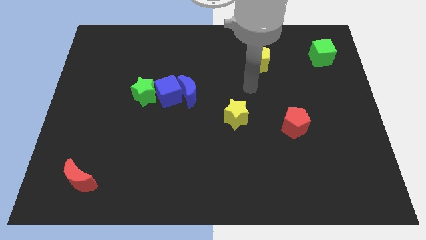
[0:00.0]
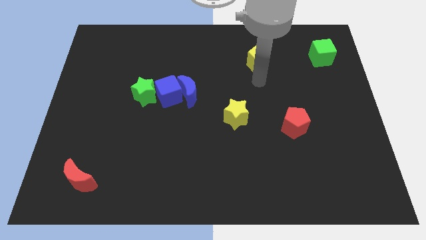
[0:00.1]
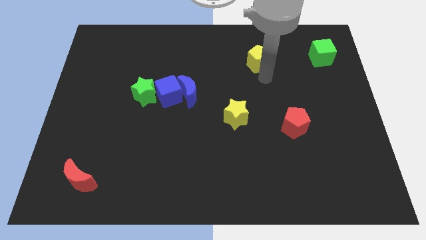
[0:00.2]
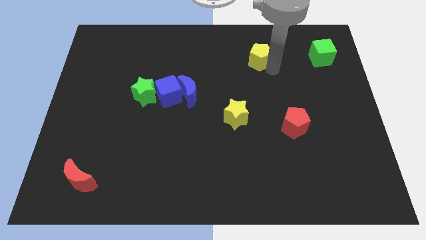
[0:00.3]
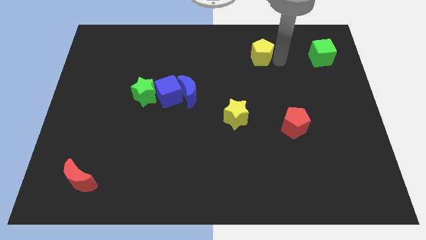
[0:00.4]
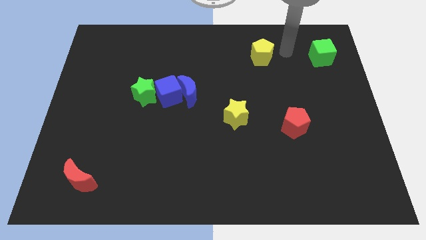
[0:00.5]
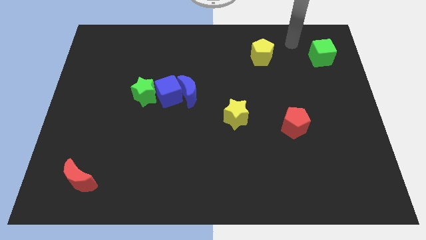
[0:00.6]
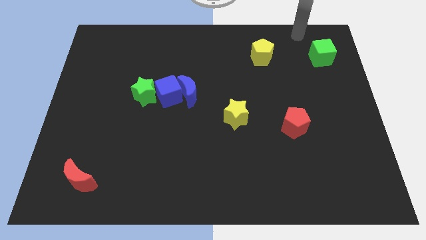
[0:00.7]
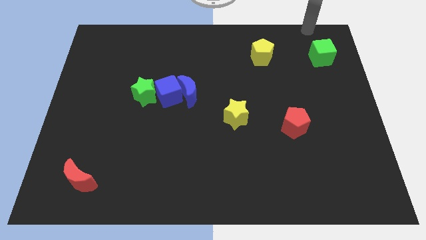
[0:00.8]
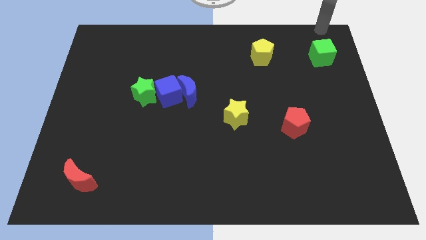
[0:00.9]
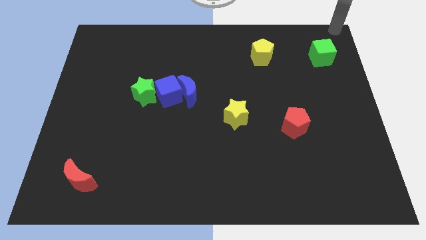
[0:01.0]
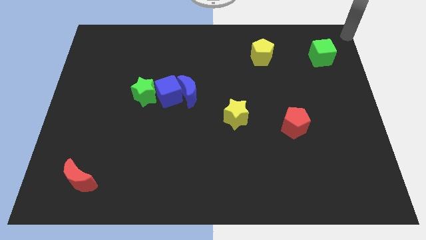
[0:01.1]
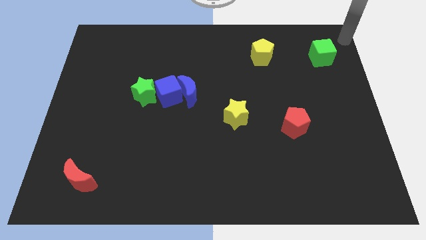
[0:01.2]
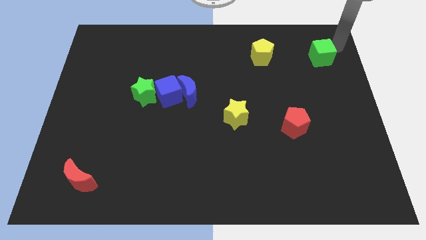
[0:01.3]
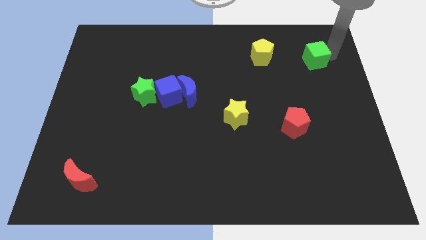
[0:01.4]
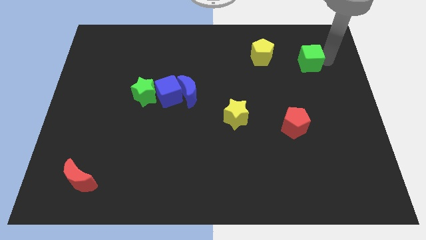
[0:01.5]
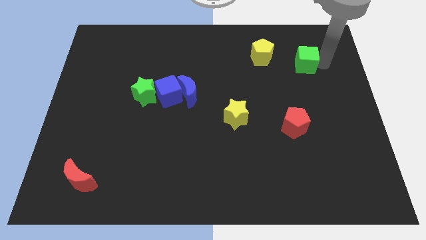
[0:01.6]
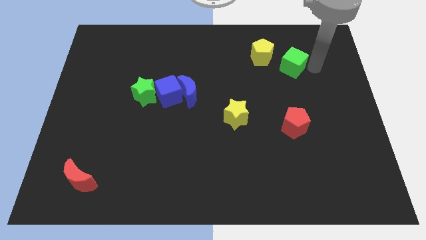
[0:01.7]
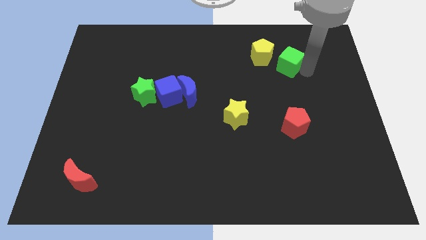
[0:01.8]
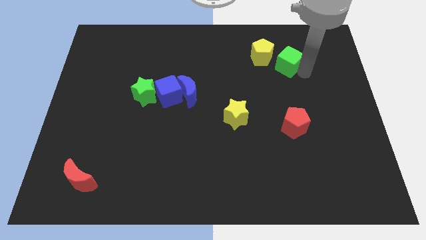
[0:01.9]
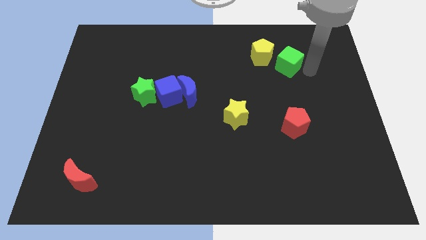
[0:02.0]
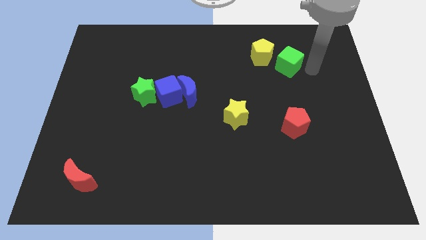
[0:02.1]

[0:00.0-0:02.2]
place the green cube at the top of red pentagon

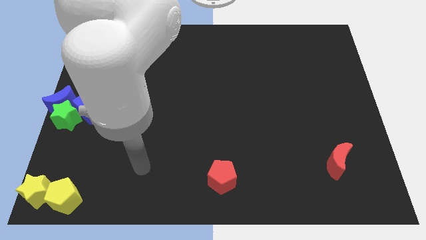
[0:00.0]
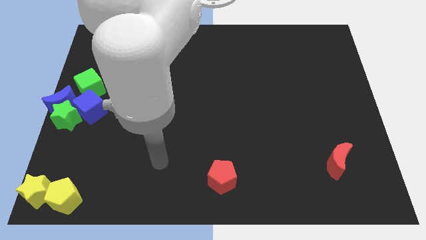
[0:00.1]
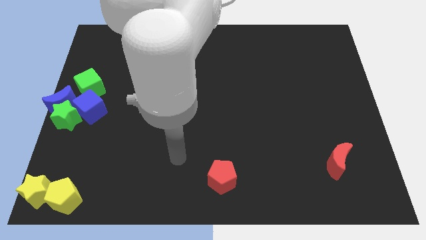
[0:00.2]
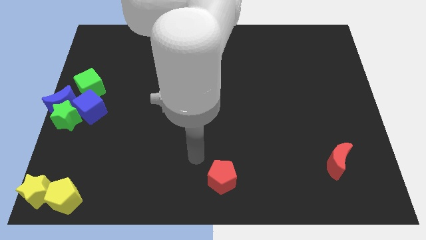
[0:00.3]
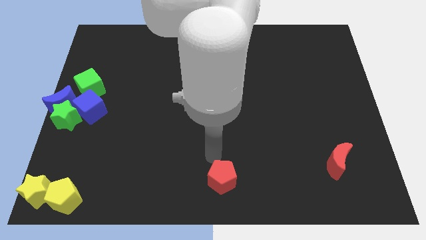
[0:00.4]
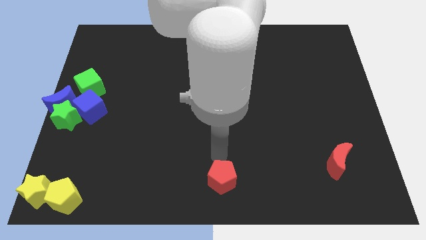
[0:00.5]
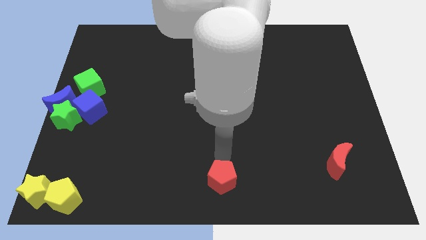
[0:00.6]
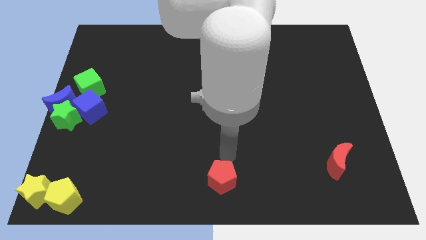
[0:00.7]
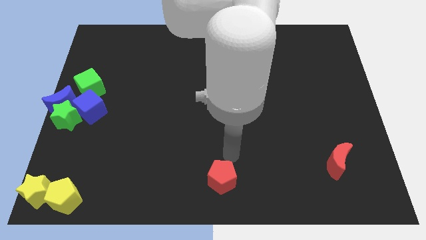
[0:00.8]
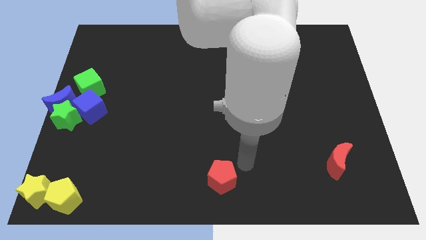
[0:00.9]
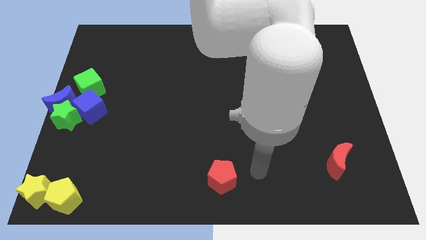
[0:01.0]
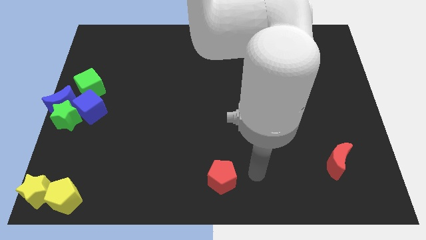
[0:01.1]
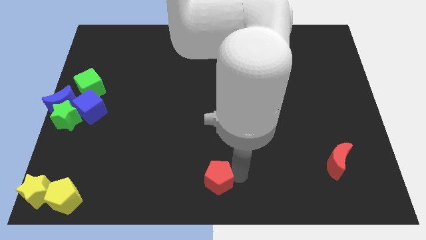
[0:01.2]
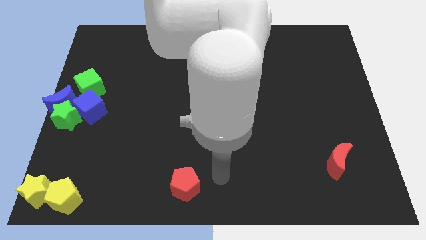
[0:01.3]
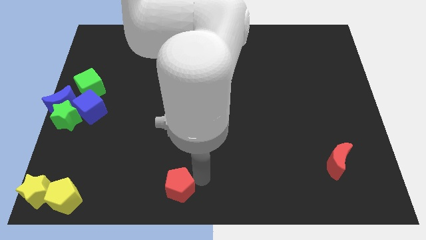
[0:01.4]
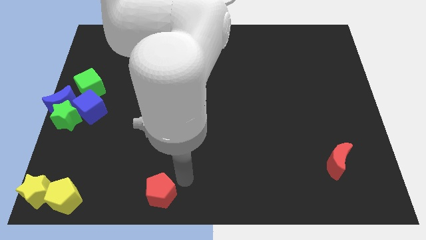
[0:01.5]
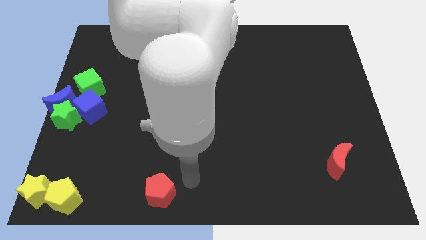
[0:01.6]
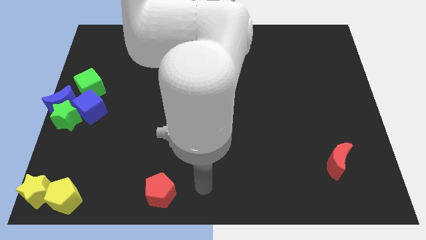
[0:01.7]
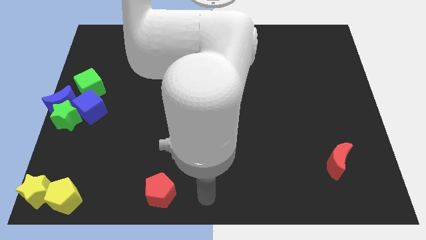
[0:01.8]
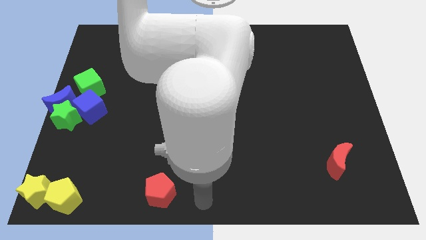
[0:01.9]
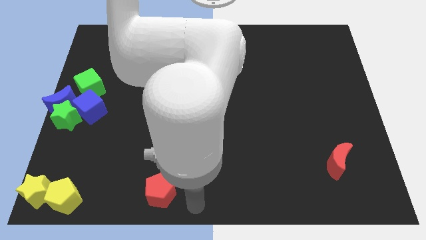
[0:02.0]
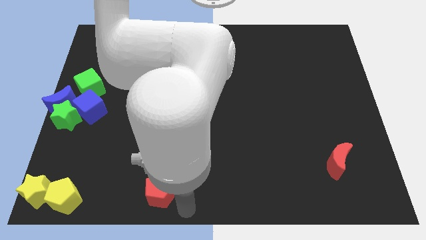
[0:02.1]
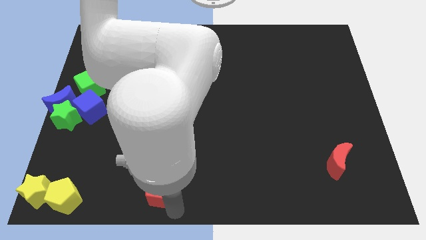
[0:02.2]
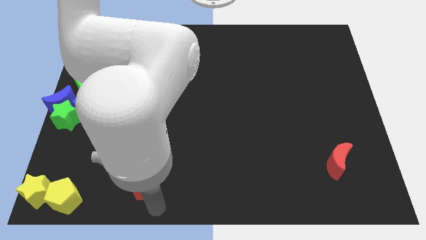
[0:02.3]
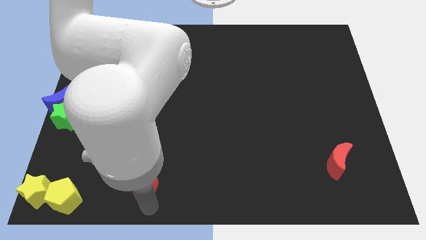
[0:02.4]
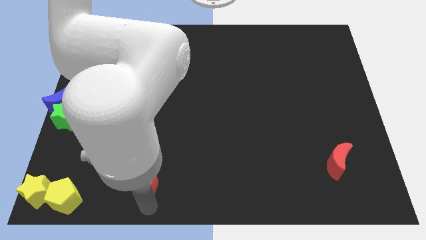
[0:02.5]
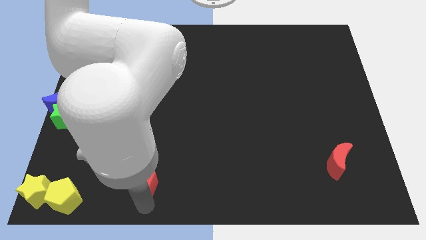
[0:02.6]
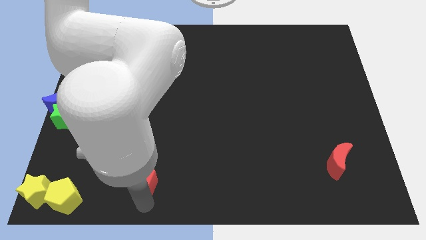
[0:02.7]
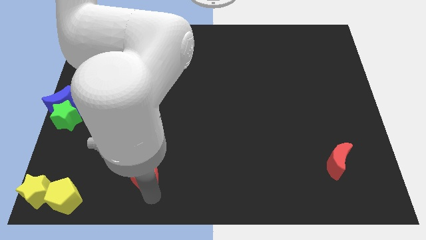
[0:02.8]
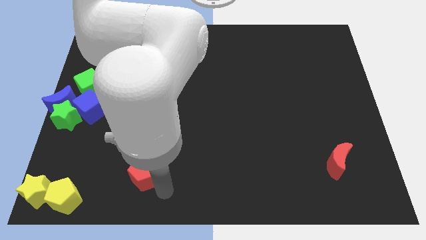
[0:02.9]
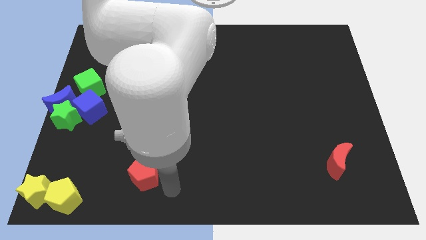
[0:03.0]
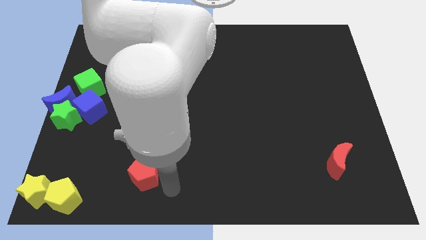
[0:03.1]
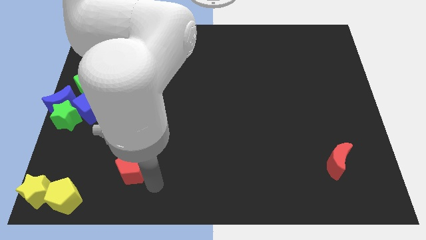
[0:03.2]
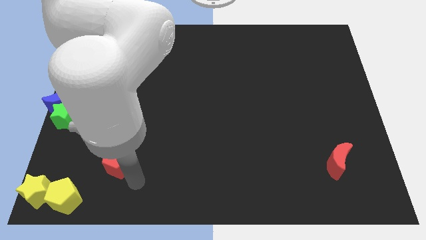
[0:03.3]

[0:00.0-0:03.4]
push the red pentagon diagonally on the top right side of the yellow pentagon

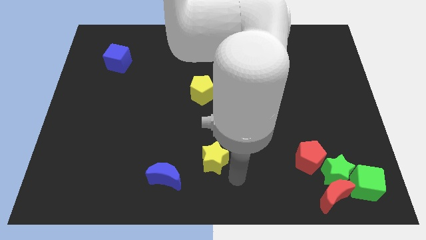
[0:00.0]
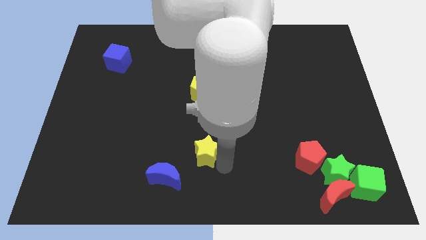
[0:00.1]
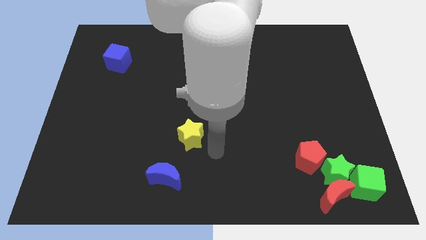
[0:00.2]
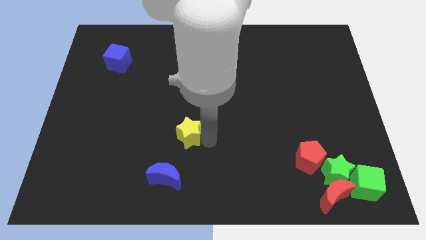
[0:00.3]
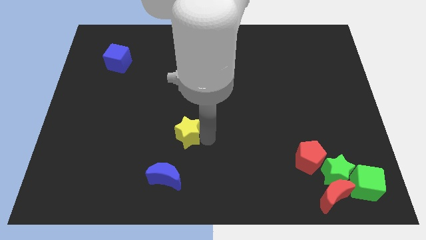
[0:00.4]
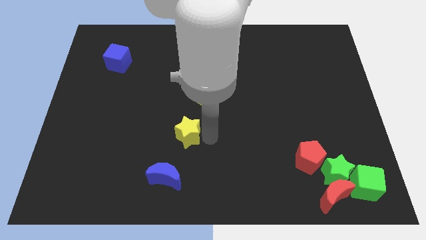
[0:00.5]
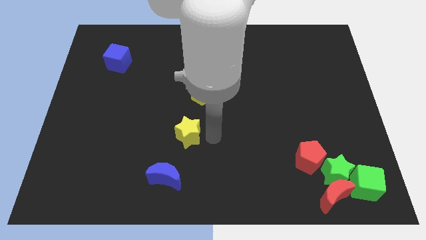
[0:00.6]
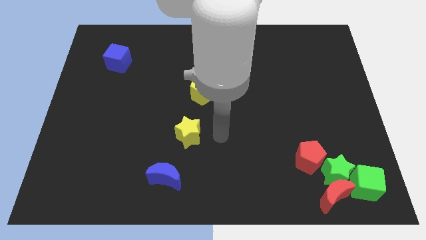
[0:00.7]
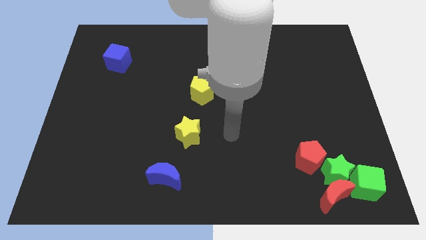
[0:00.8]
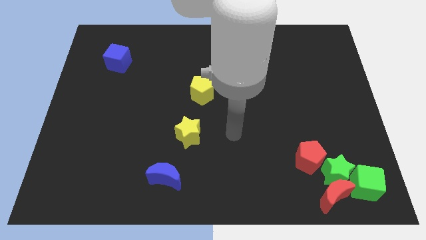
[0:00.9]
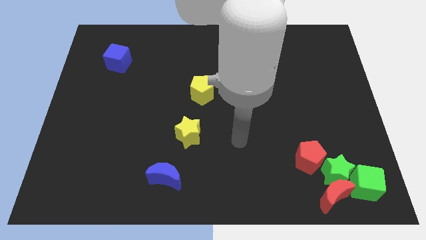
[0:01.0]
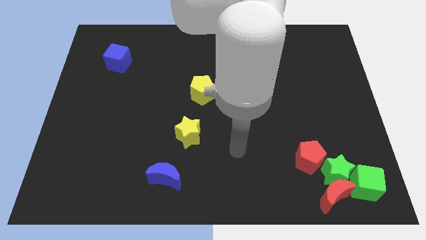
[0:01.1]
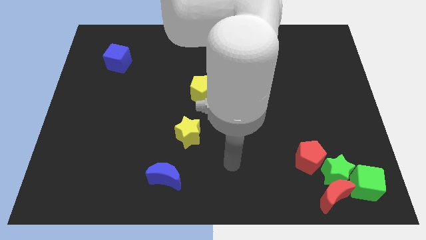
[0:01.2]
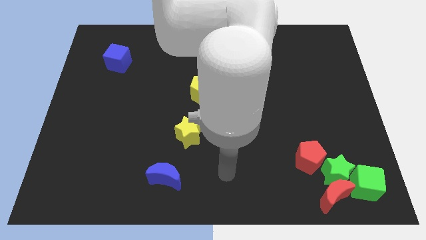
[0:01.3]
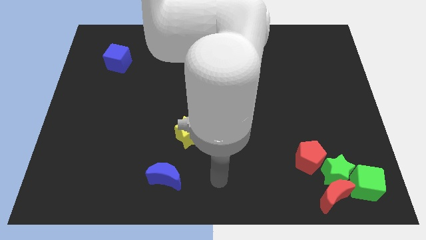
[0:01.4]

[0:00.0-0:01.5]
push the yellow pentagon slightly upwards of the board

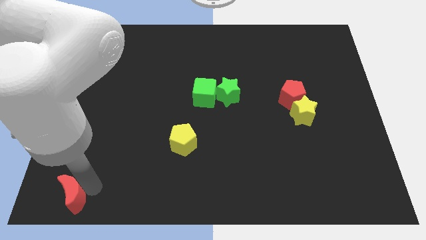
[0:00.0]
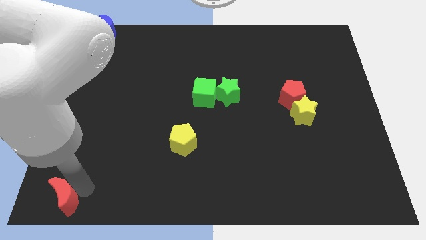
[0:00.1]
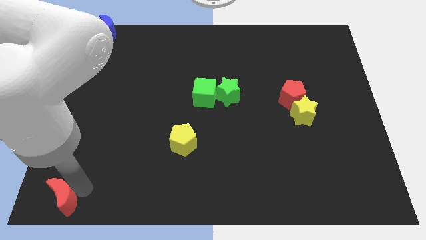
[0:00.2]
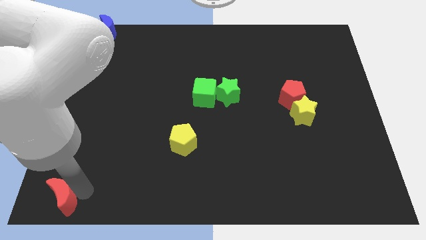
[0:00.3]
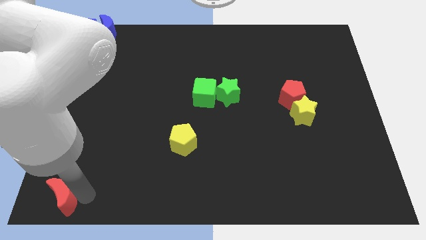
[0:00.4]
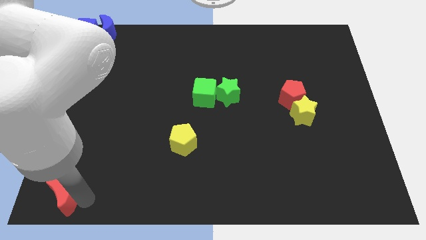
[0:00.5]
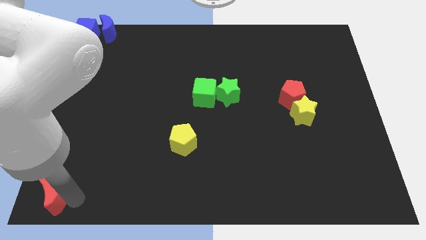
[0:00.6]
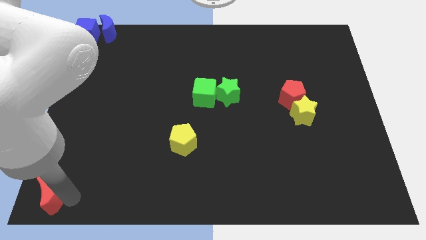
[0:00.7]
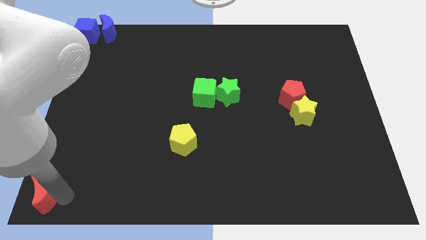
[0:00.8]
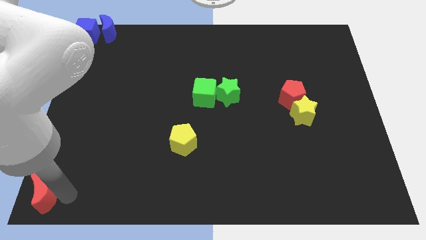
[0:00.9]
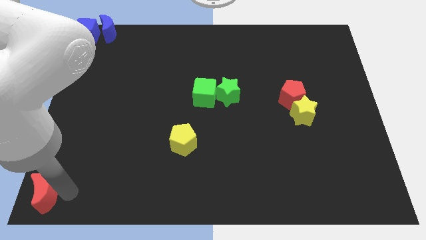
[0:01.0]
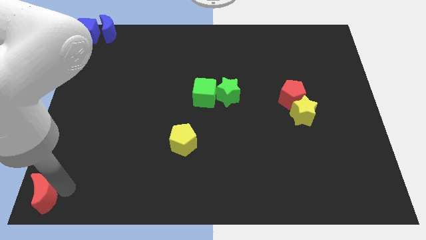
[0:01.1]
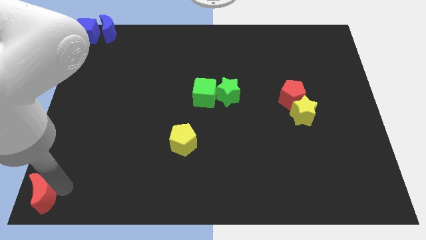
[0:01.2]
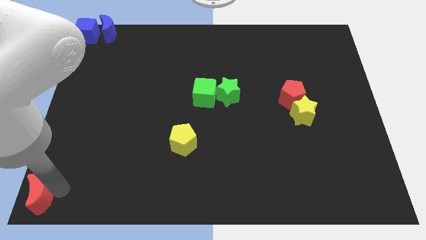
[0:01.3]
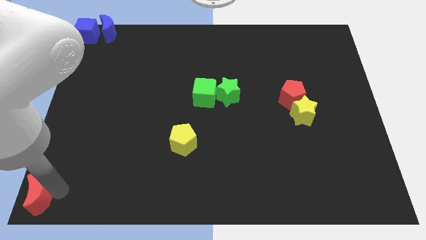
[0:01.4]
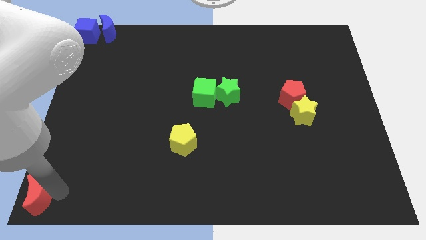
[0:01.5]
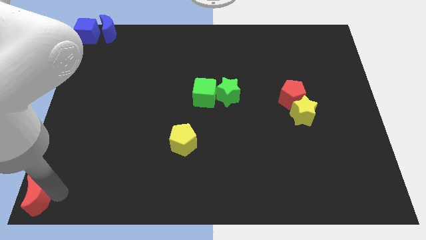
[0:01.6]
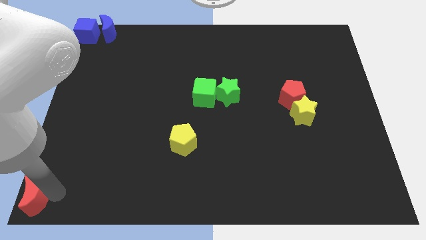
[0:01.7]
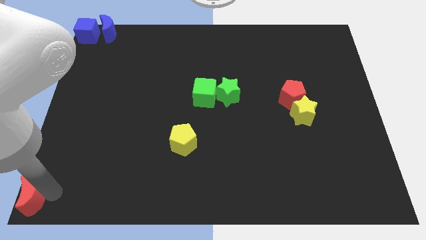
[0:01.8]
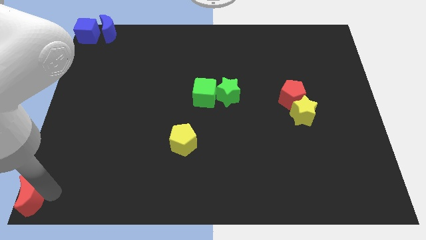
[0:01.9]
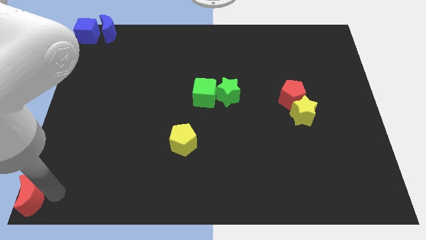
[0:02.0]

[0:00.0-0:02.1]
slide red moon to the bottom left
